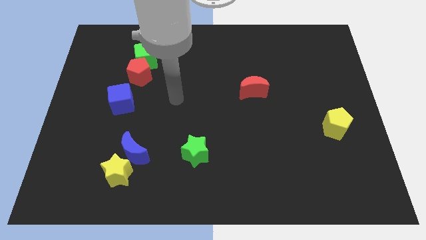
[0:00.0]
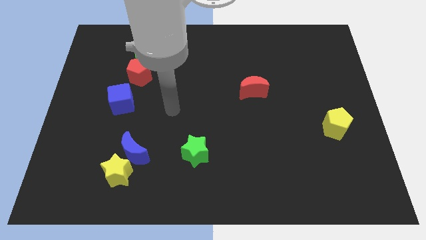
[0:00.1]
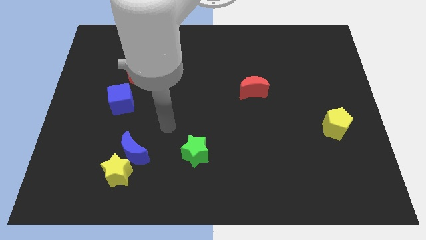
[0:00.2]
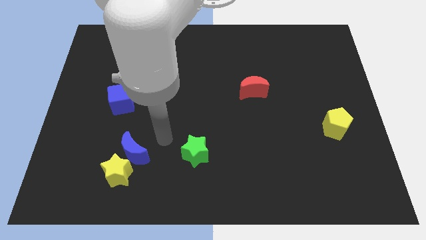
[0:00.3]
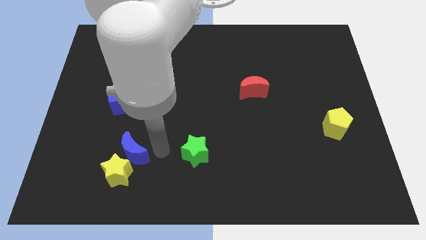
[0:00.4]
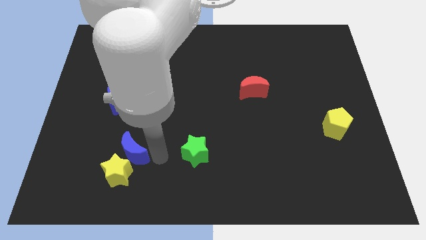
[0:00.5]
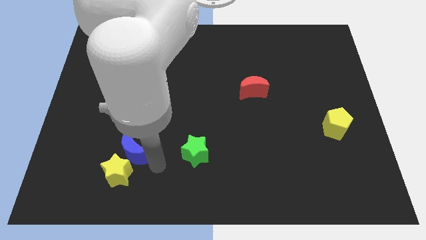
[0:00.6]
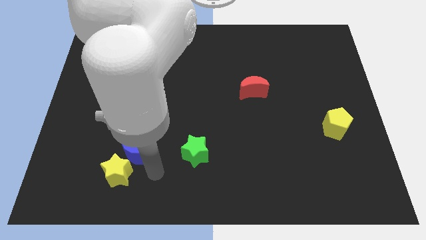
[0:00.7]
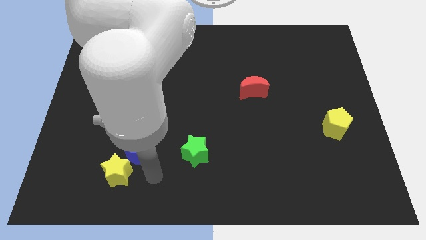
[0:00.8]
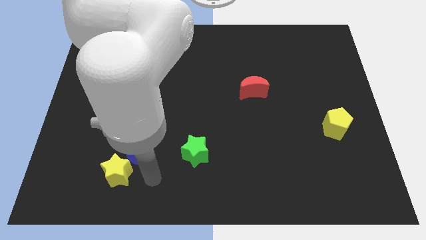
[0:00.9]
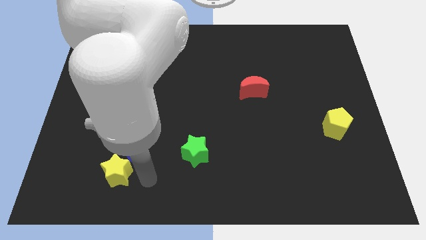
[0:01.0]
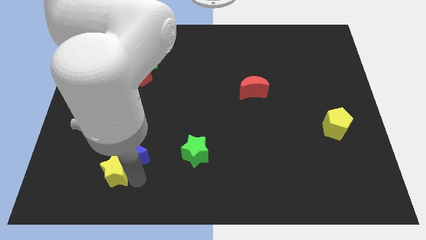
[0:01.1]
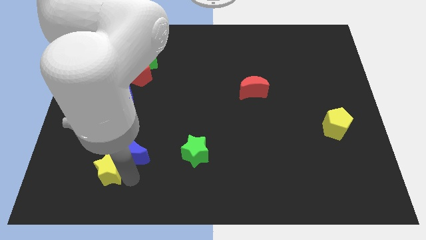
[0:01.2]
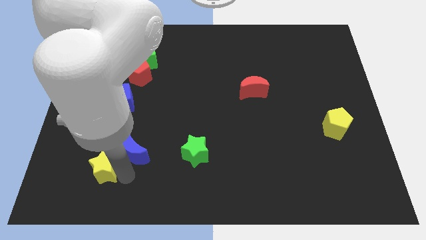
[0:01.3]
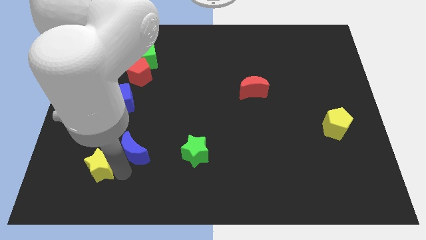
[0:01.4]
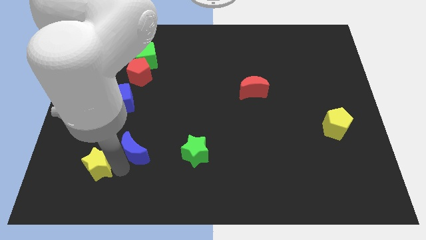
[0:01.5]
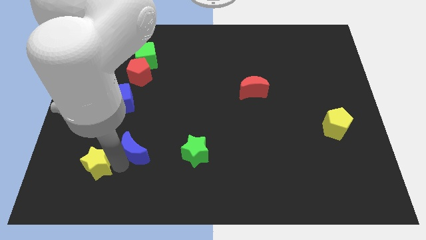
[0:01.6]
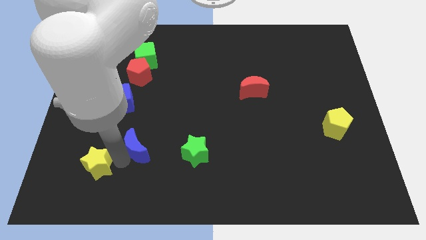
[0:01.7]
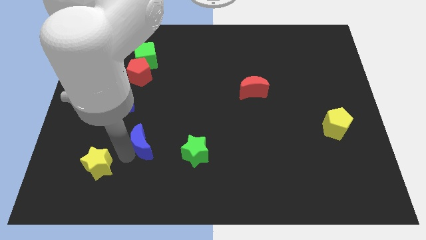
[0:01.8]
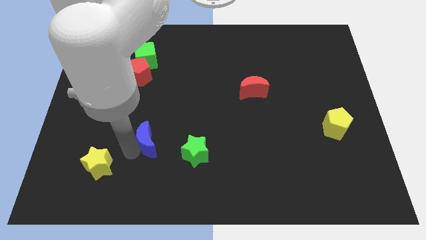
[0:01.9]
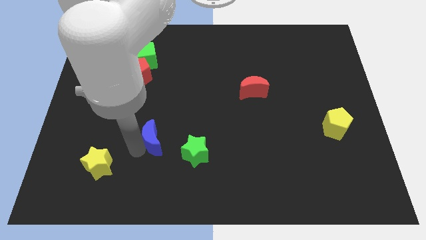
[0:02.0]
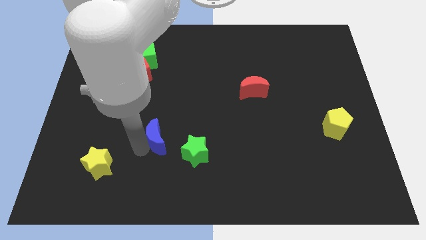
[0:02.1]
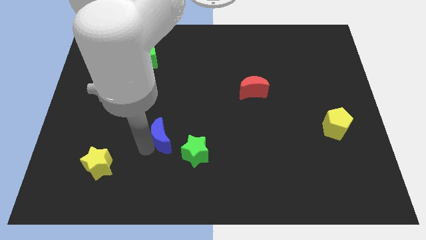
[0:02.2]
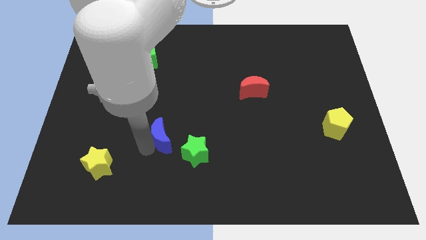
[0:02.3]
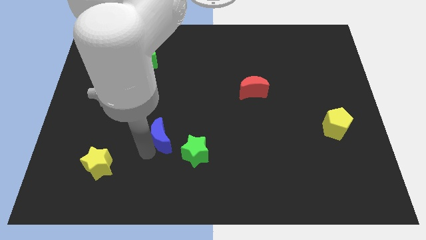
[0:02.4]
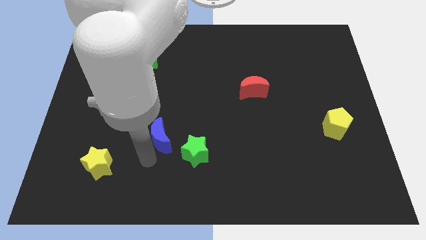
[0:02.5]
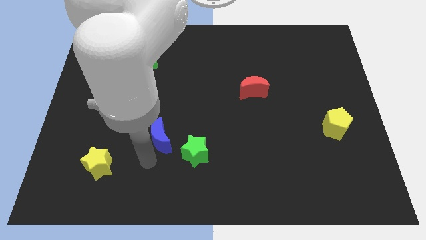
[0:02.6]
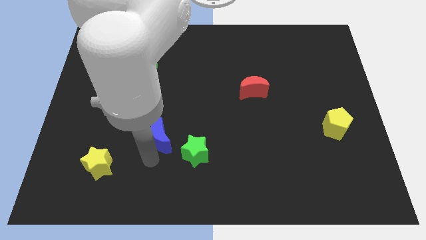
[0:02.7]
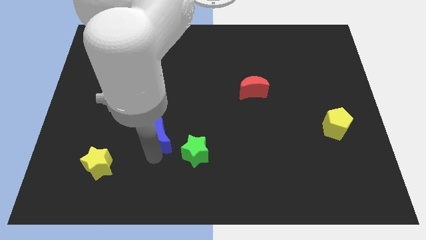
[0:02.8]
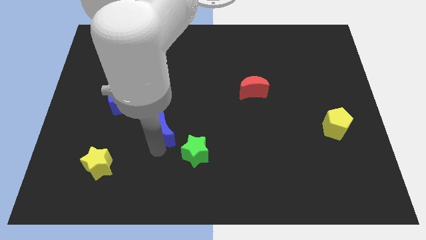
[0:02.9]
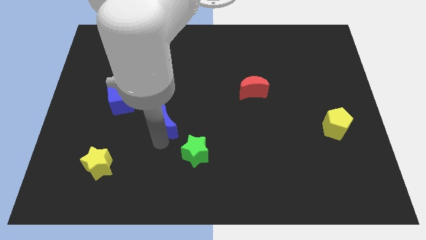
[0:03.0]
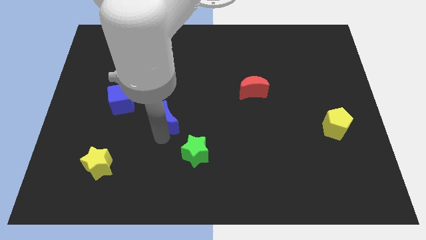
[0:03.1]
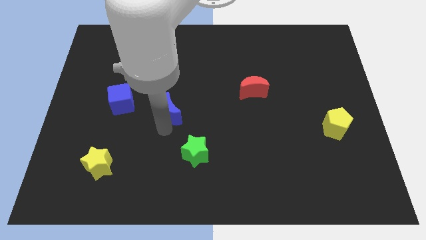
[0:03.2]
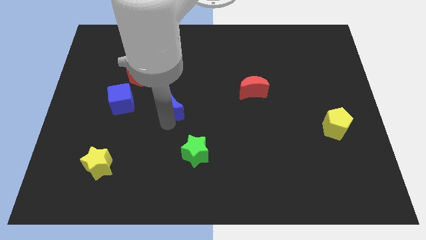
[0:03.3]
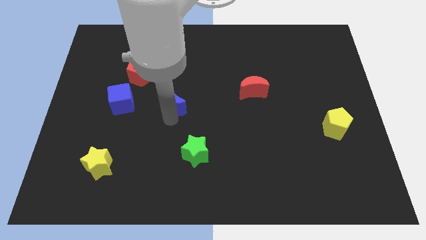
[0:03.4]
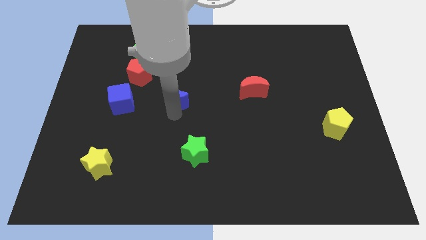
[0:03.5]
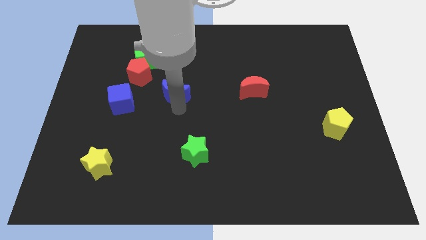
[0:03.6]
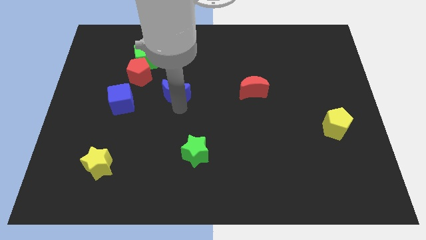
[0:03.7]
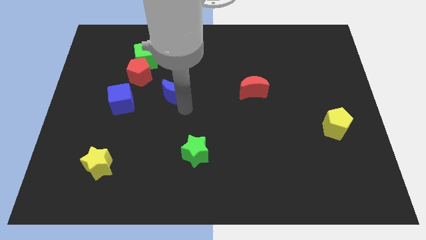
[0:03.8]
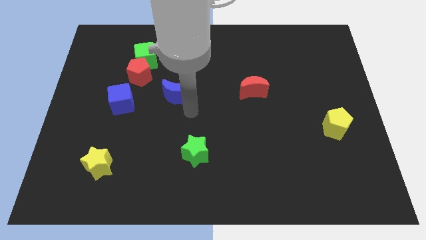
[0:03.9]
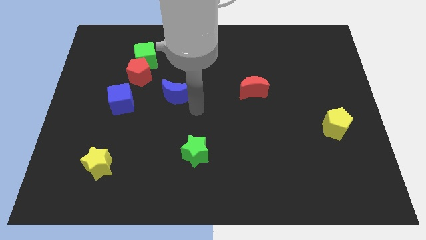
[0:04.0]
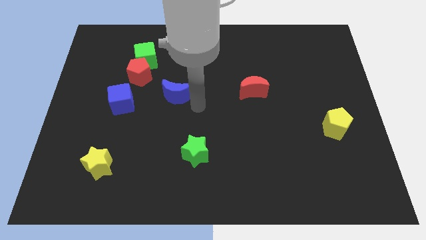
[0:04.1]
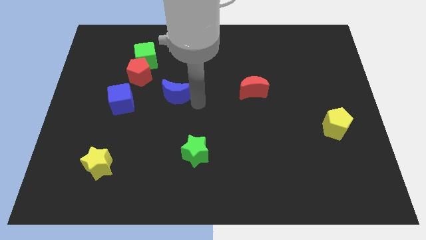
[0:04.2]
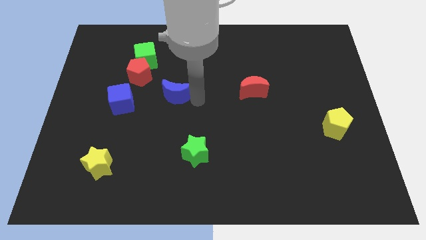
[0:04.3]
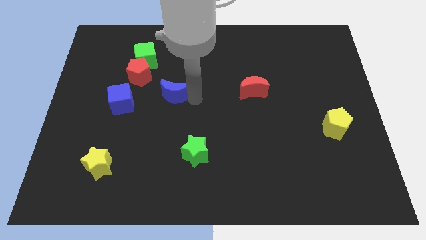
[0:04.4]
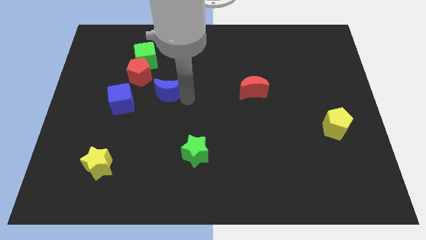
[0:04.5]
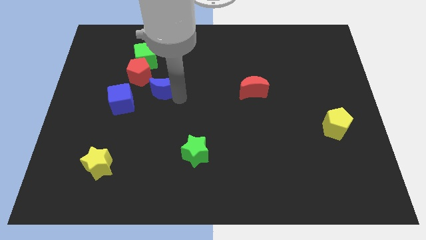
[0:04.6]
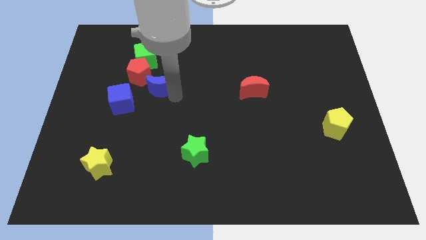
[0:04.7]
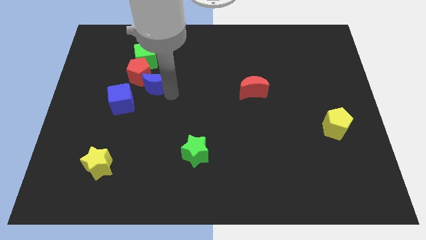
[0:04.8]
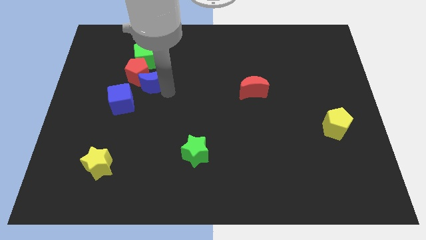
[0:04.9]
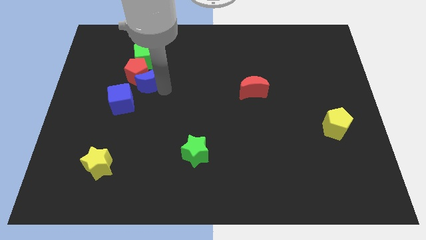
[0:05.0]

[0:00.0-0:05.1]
move the blue moon next to the red pentagon

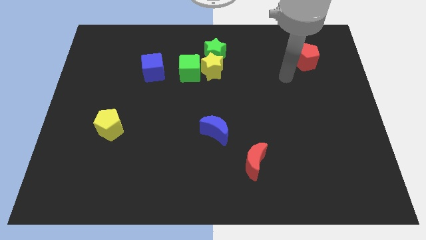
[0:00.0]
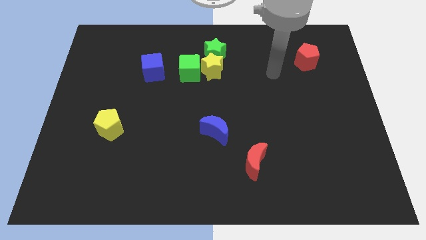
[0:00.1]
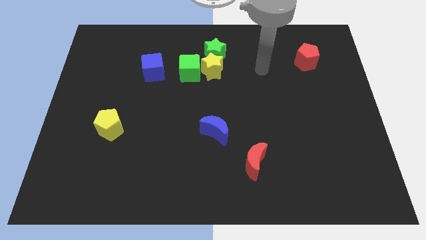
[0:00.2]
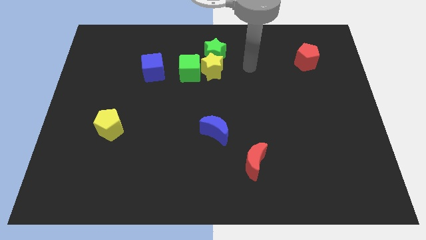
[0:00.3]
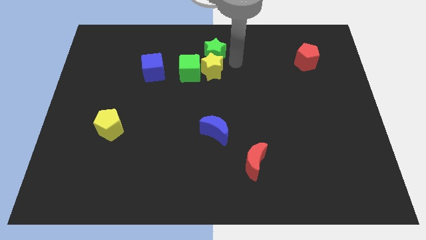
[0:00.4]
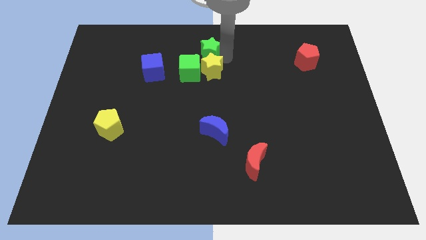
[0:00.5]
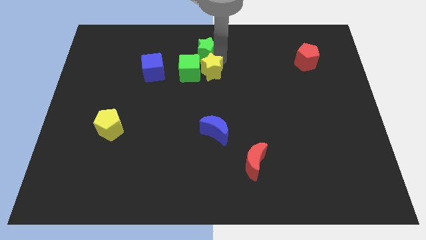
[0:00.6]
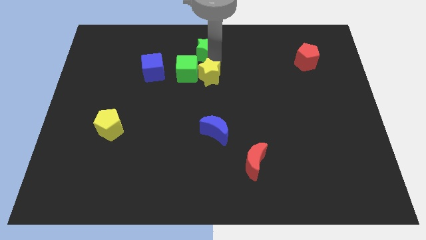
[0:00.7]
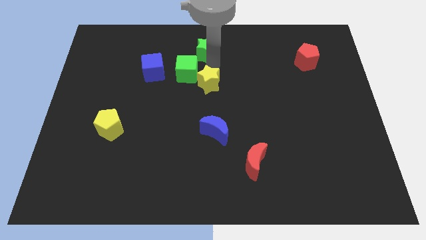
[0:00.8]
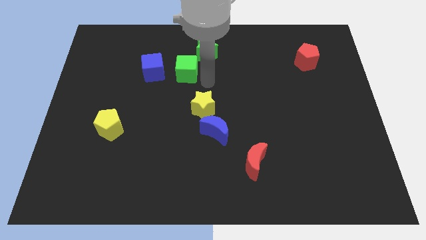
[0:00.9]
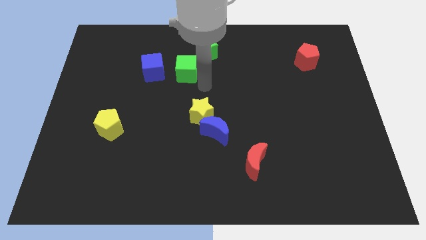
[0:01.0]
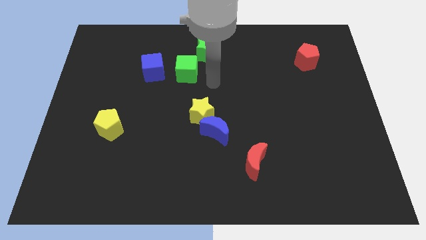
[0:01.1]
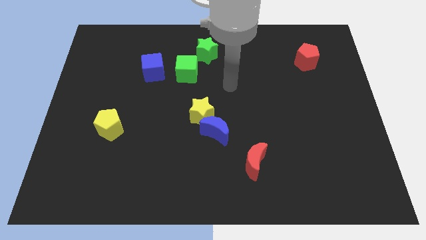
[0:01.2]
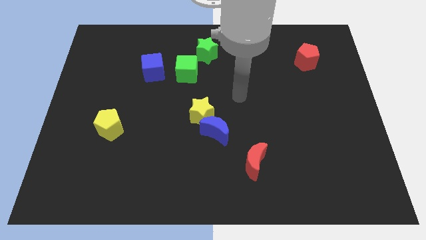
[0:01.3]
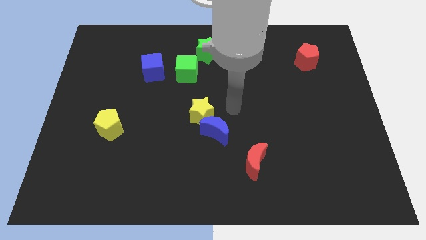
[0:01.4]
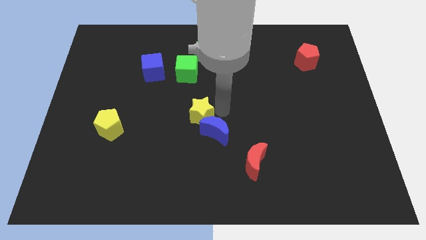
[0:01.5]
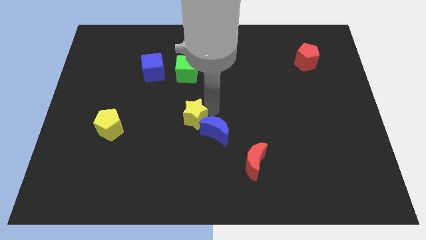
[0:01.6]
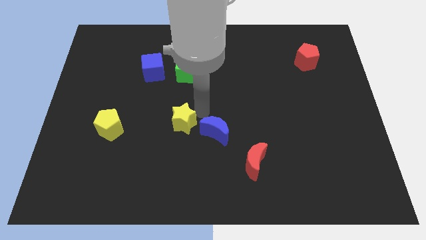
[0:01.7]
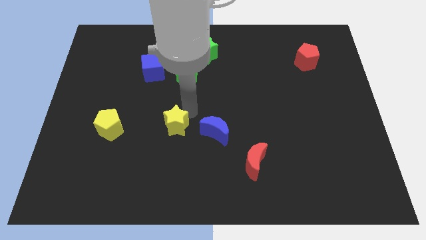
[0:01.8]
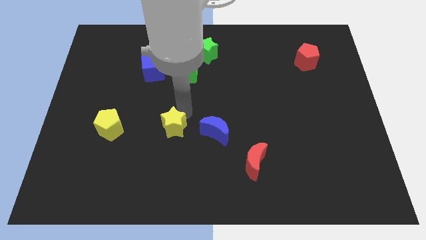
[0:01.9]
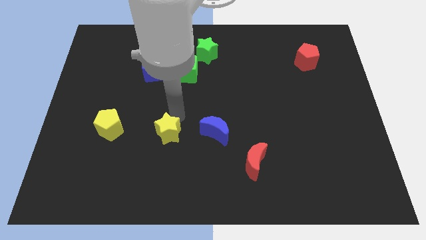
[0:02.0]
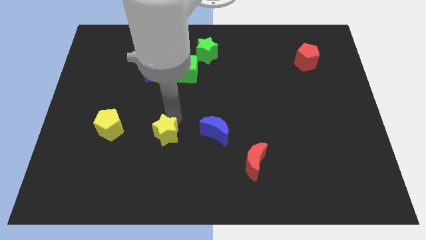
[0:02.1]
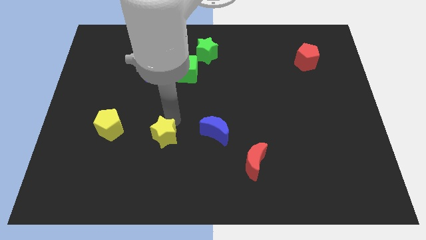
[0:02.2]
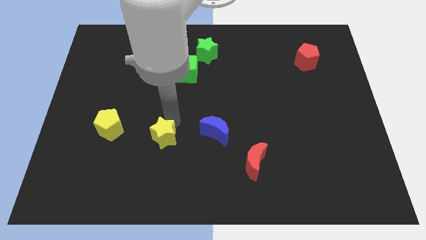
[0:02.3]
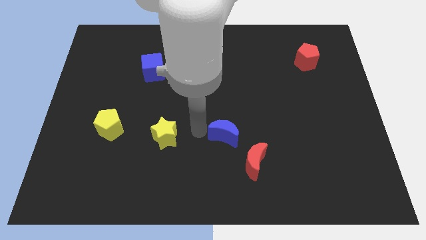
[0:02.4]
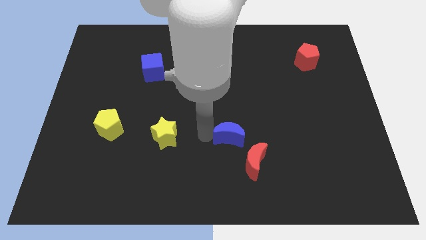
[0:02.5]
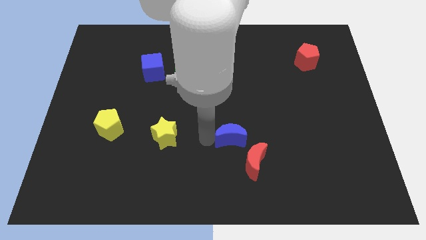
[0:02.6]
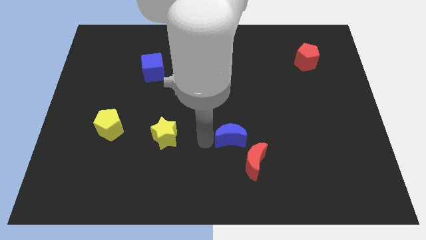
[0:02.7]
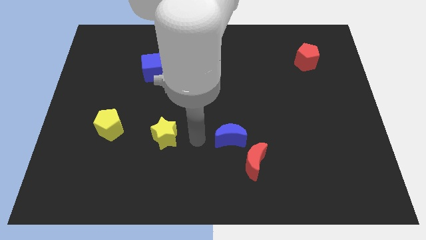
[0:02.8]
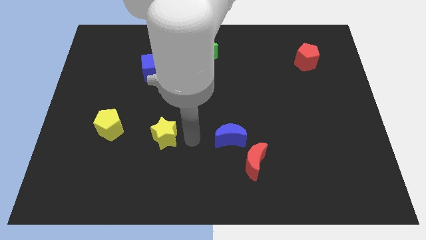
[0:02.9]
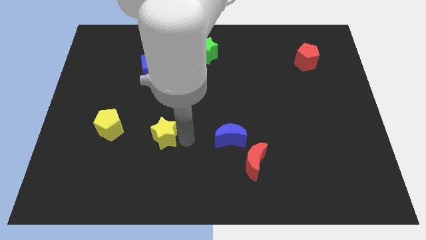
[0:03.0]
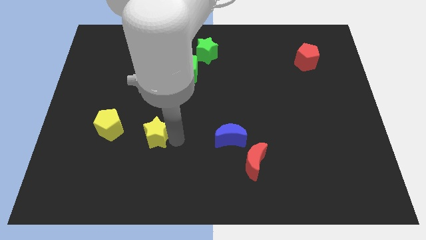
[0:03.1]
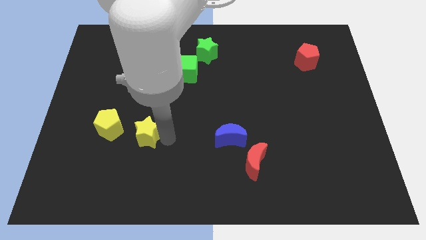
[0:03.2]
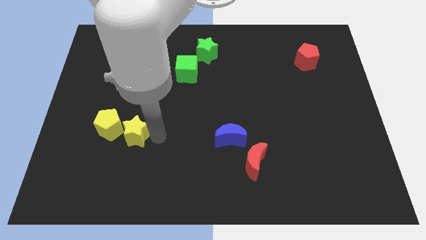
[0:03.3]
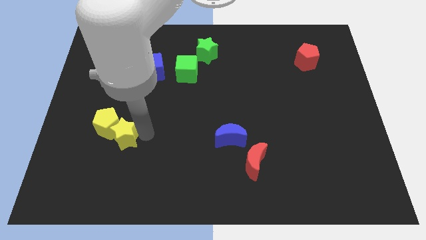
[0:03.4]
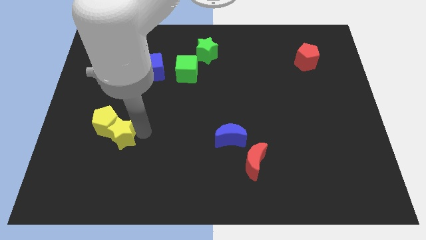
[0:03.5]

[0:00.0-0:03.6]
put the yellow star to the yellow pentagon
